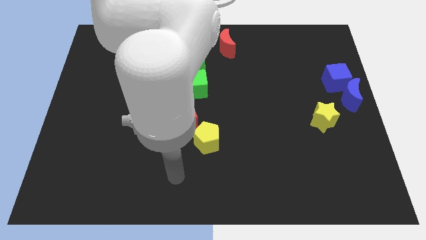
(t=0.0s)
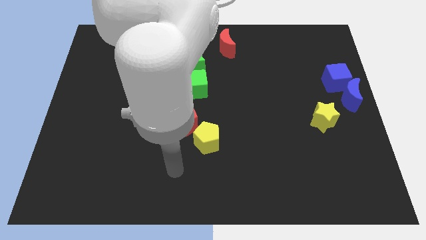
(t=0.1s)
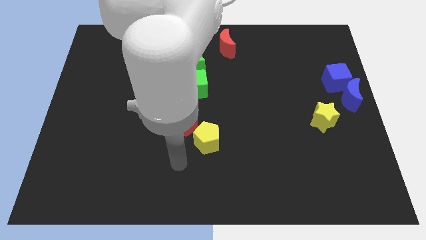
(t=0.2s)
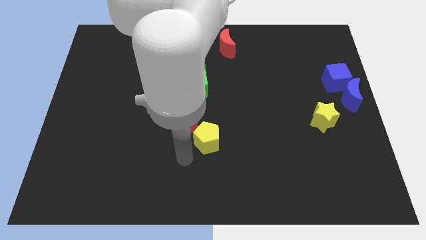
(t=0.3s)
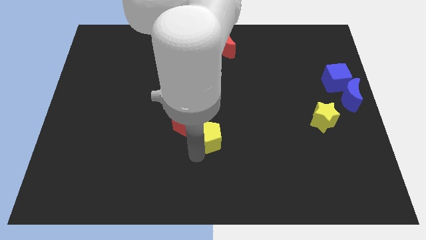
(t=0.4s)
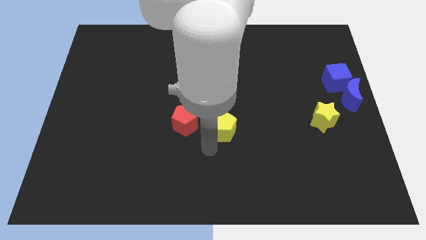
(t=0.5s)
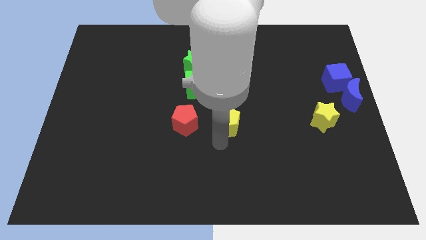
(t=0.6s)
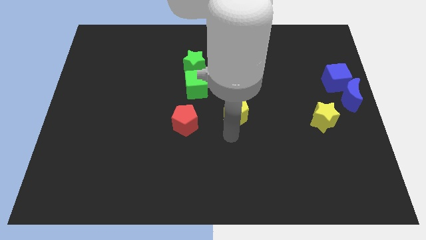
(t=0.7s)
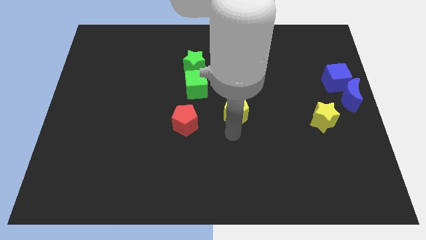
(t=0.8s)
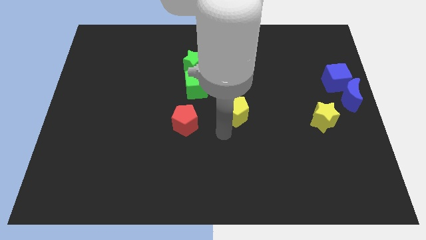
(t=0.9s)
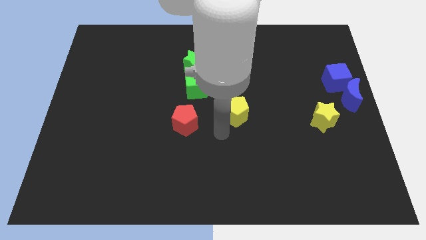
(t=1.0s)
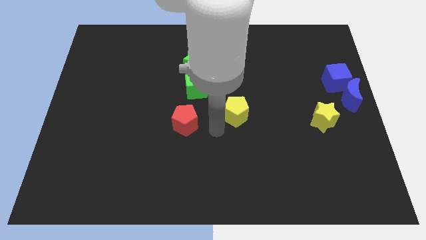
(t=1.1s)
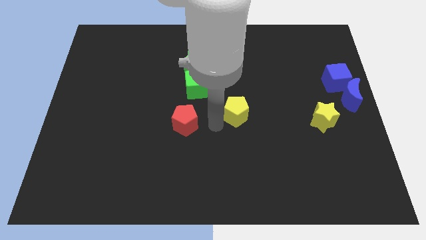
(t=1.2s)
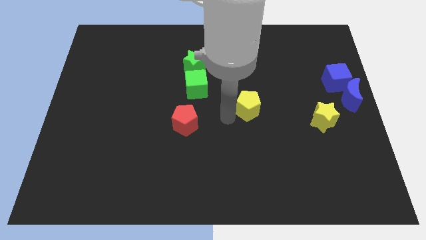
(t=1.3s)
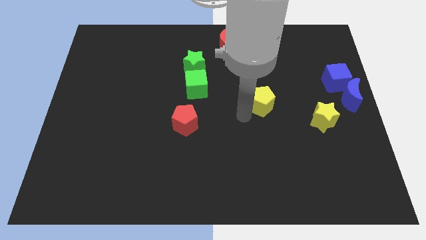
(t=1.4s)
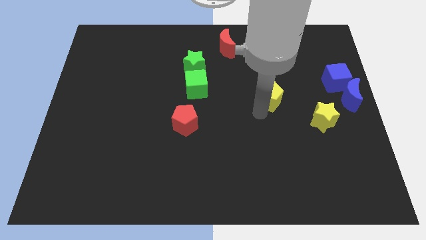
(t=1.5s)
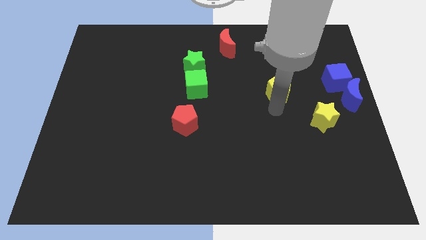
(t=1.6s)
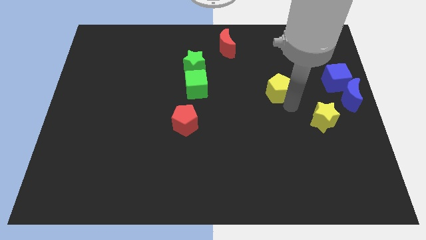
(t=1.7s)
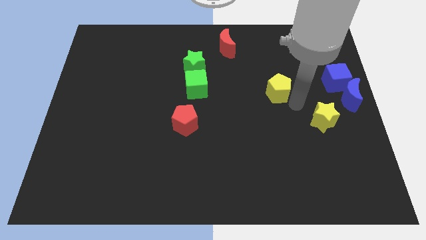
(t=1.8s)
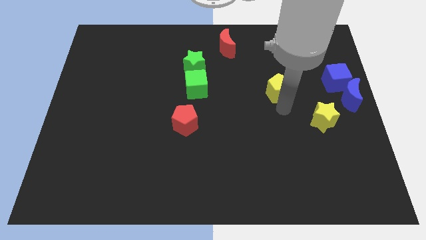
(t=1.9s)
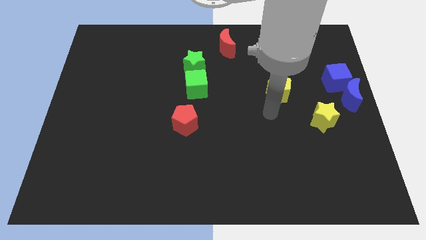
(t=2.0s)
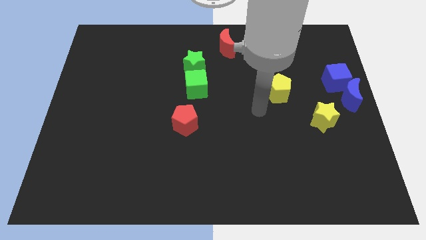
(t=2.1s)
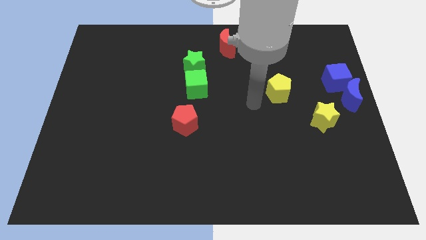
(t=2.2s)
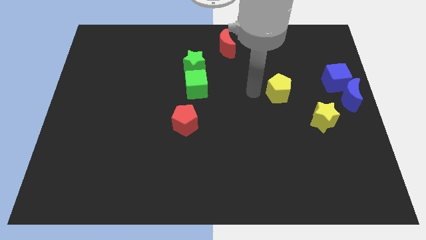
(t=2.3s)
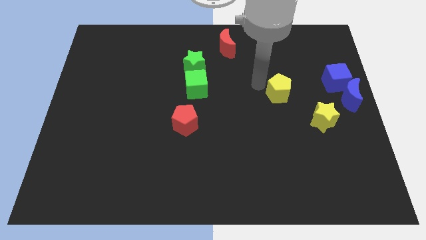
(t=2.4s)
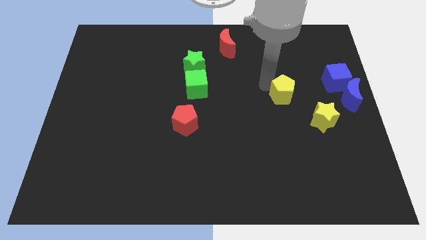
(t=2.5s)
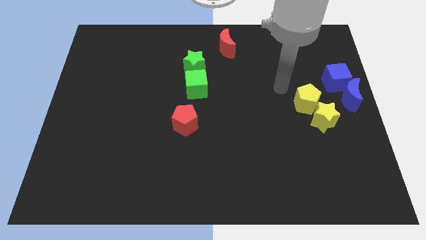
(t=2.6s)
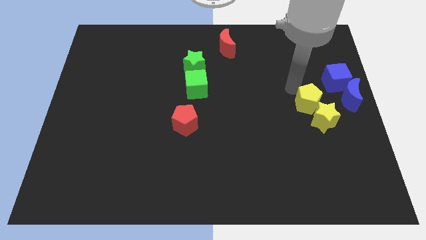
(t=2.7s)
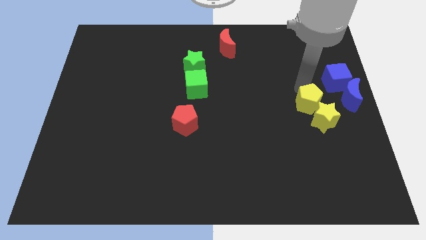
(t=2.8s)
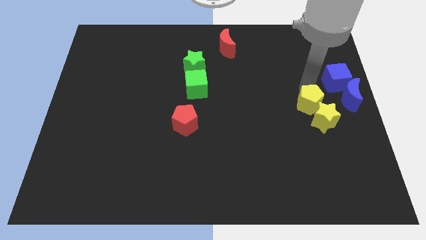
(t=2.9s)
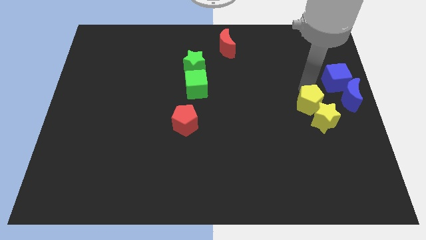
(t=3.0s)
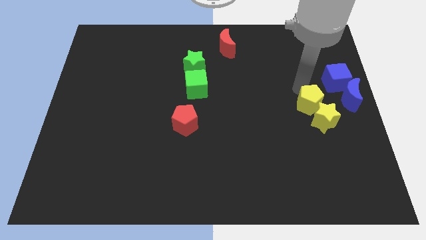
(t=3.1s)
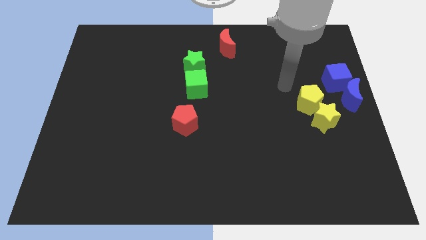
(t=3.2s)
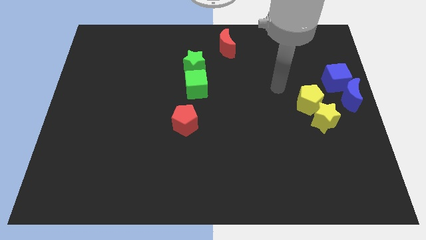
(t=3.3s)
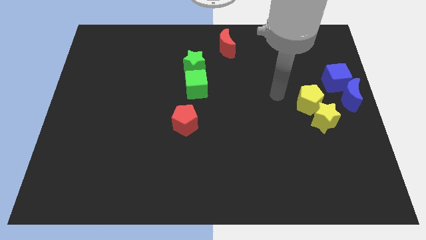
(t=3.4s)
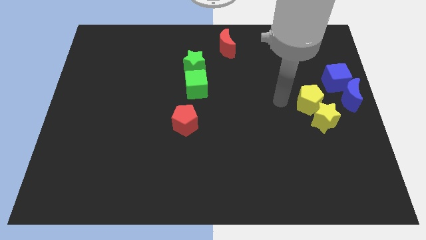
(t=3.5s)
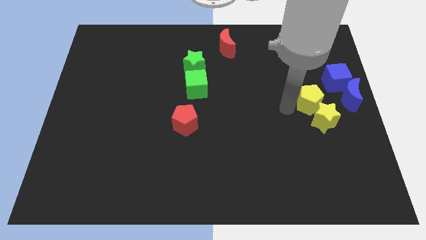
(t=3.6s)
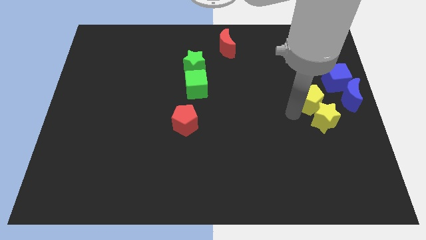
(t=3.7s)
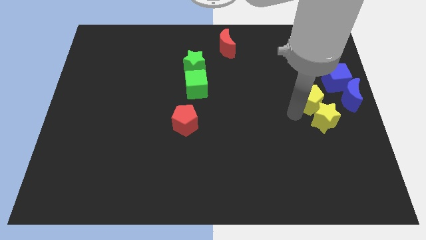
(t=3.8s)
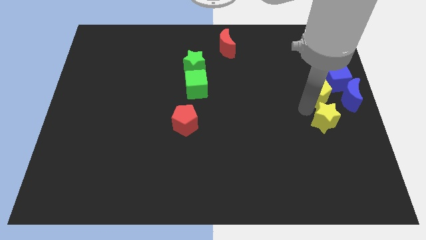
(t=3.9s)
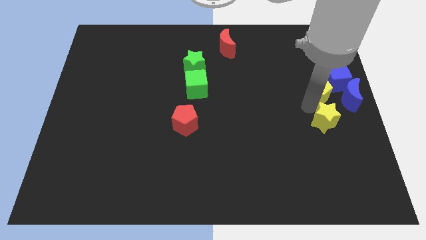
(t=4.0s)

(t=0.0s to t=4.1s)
place yellow pentagon above yellow star

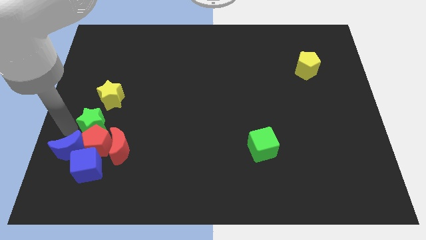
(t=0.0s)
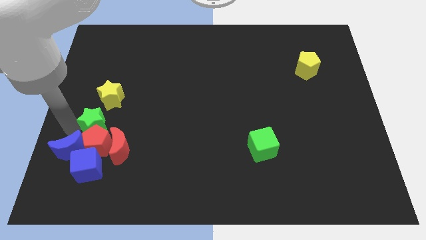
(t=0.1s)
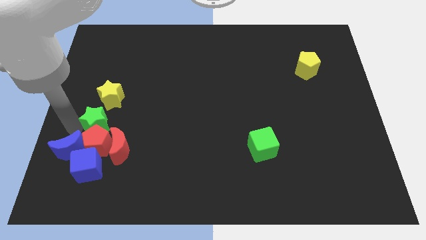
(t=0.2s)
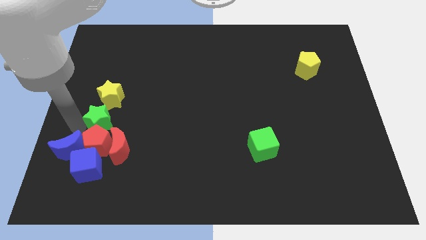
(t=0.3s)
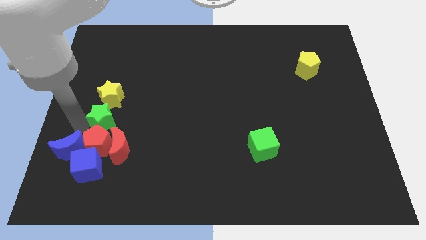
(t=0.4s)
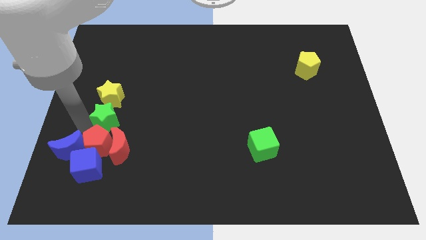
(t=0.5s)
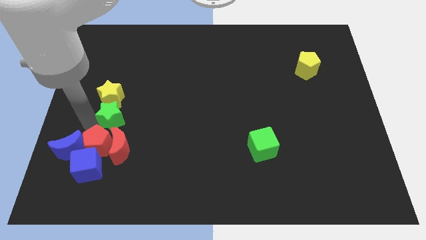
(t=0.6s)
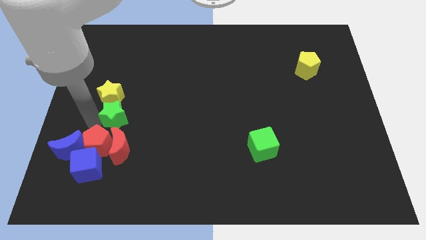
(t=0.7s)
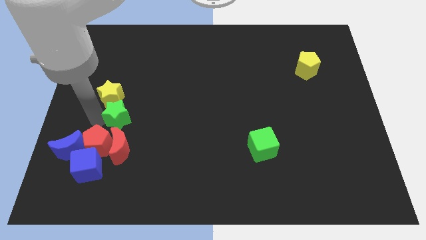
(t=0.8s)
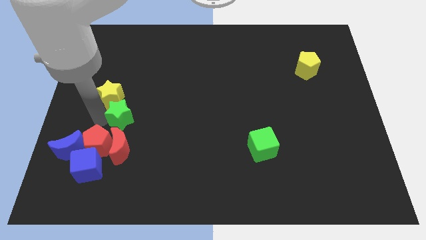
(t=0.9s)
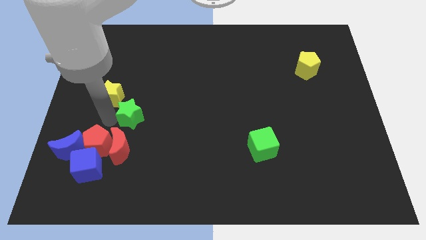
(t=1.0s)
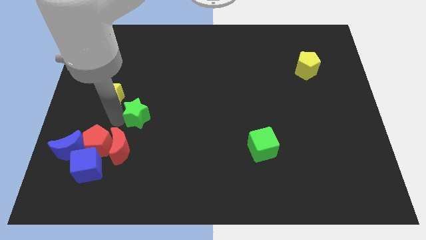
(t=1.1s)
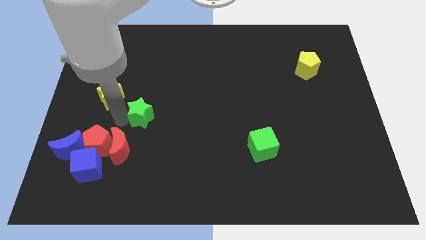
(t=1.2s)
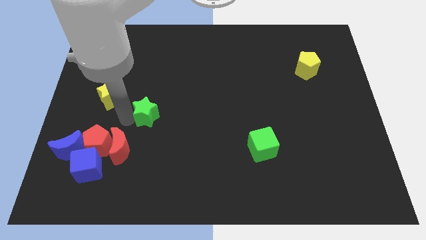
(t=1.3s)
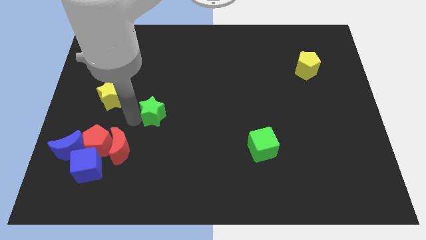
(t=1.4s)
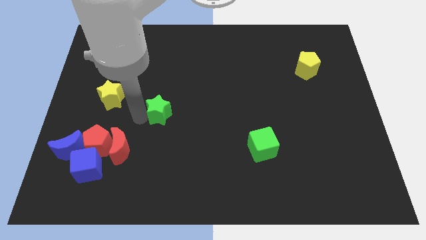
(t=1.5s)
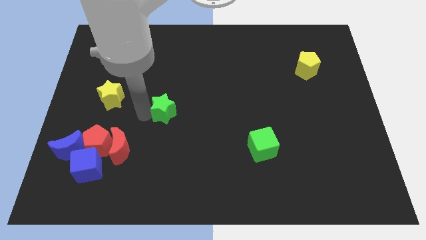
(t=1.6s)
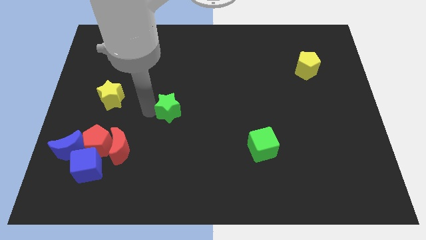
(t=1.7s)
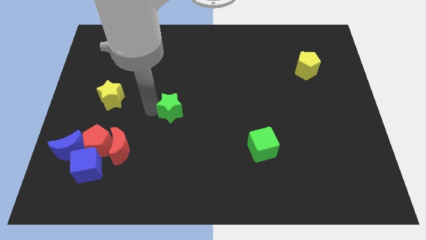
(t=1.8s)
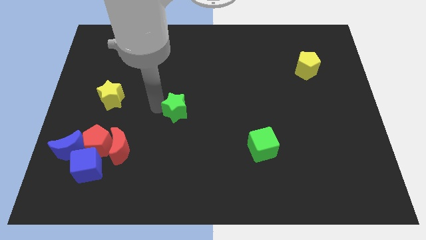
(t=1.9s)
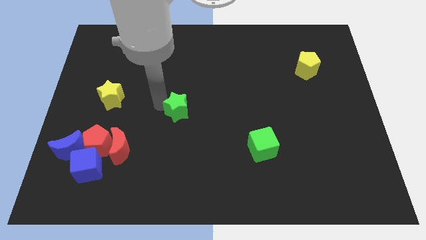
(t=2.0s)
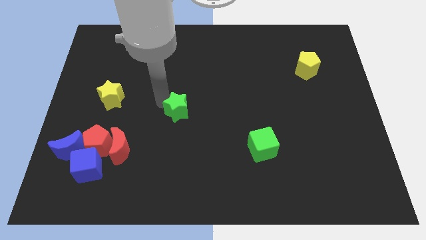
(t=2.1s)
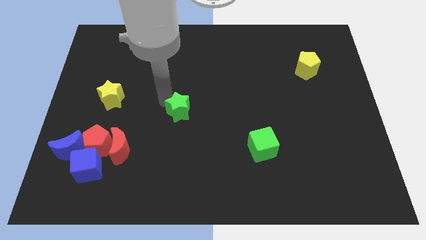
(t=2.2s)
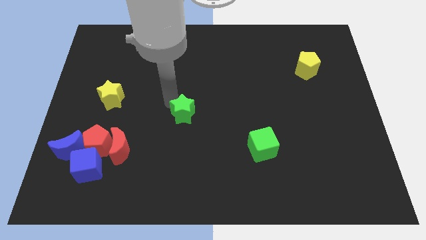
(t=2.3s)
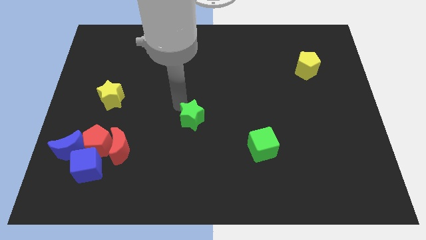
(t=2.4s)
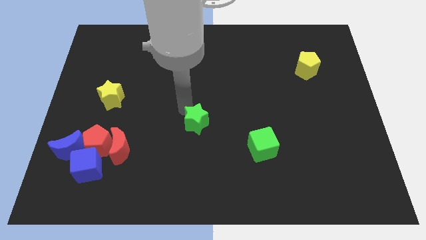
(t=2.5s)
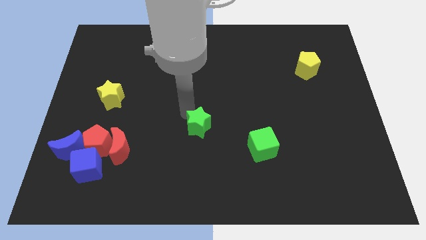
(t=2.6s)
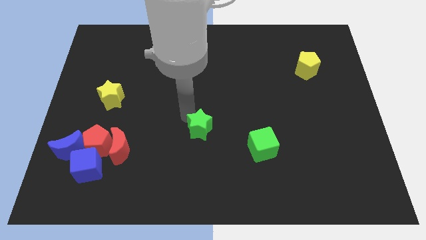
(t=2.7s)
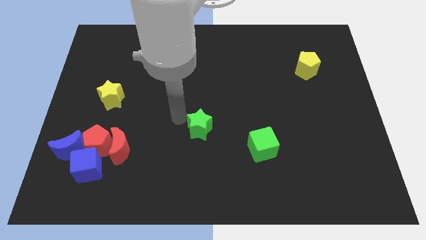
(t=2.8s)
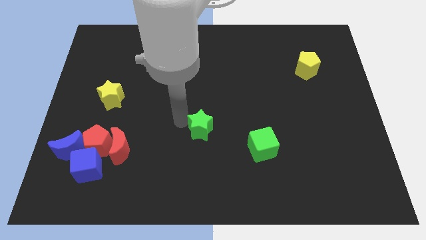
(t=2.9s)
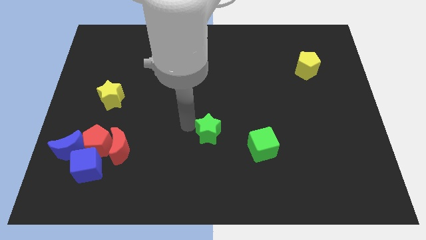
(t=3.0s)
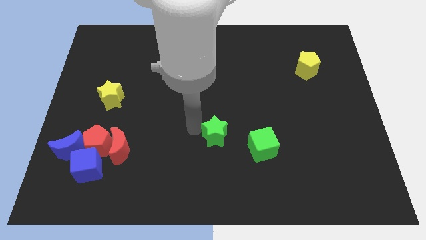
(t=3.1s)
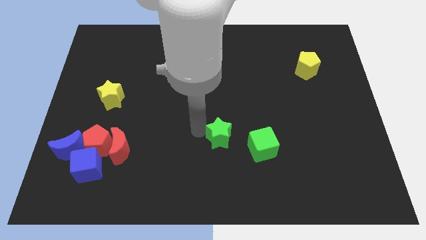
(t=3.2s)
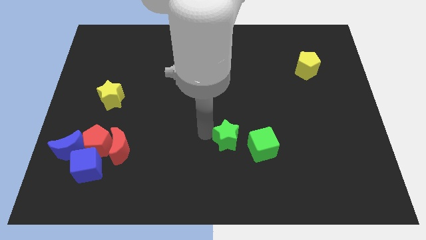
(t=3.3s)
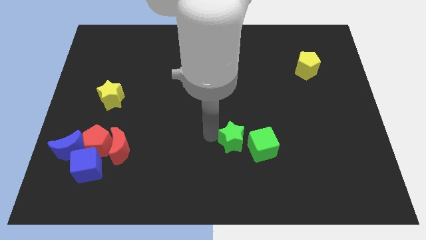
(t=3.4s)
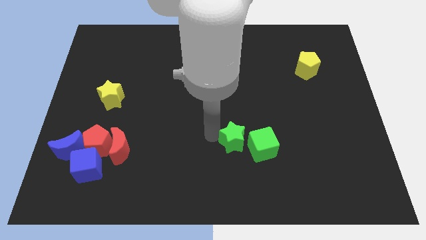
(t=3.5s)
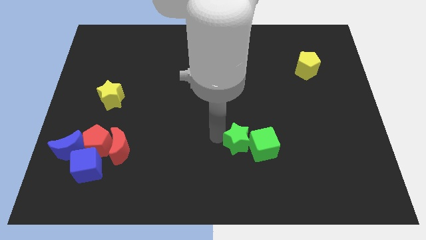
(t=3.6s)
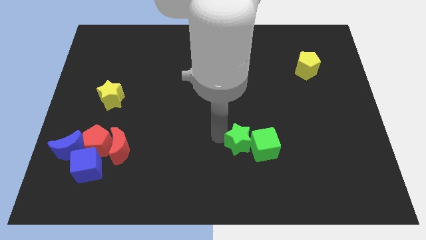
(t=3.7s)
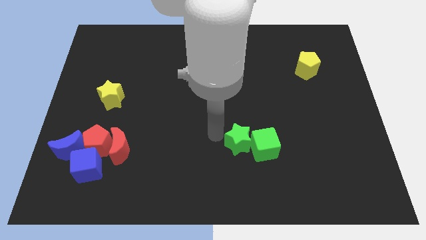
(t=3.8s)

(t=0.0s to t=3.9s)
push the green star into the green cube

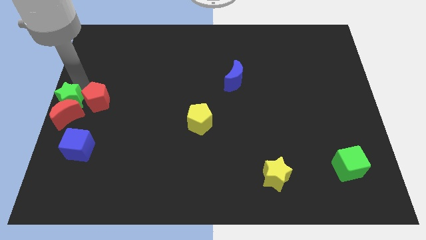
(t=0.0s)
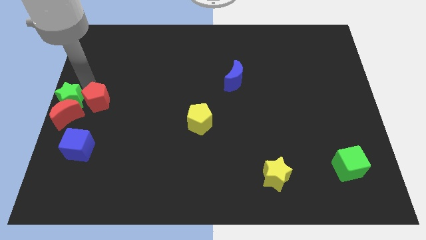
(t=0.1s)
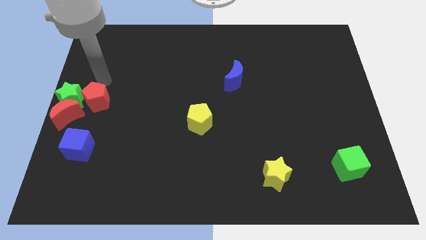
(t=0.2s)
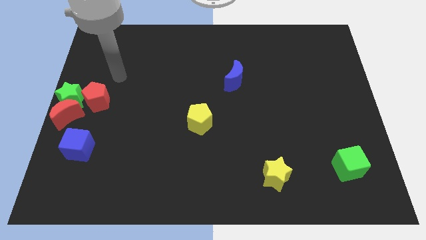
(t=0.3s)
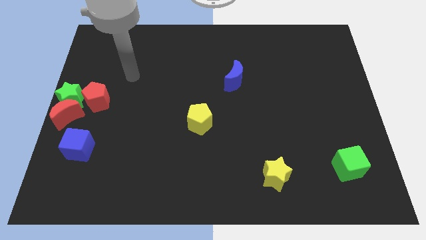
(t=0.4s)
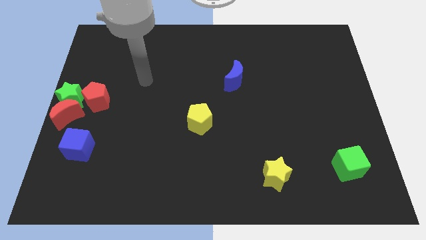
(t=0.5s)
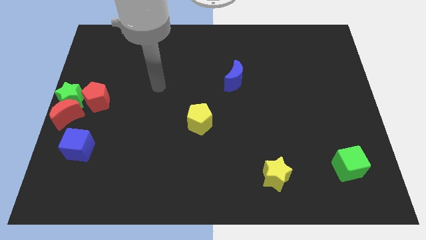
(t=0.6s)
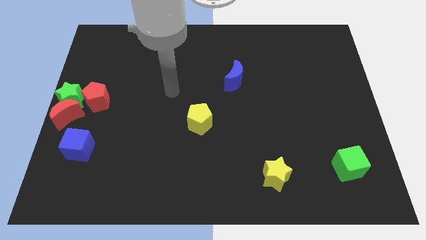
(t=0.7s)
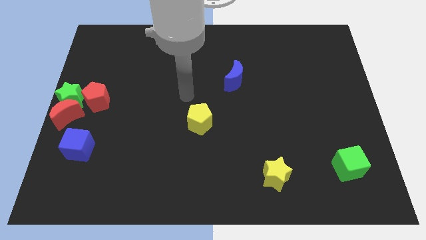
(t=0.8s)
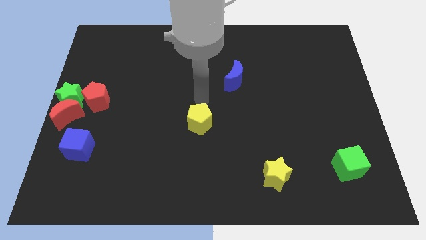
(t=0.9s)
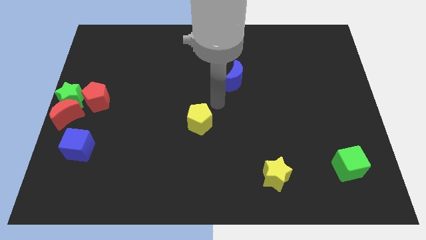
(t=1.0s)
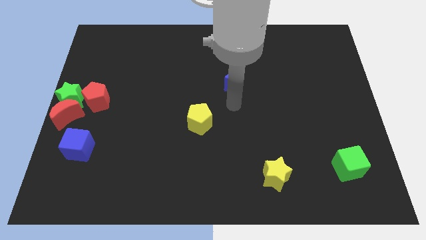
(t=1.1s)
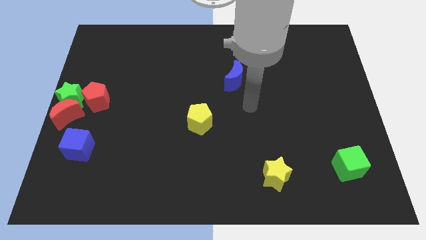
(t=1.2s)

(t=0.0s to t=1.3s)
point your arm between yellow pentagon and blue moon
